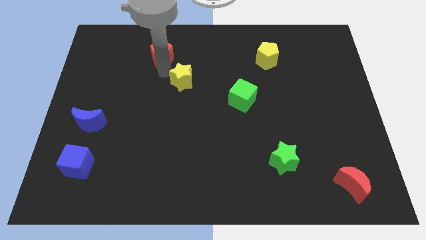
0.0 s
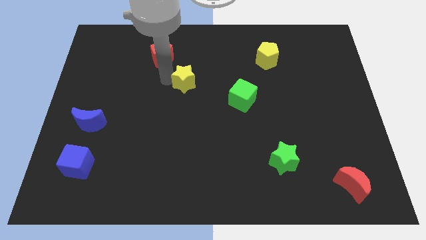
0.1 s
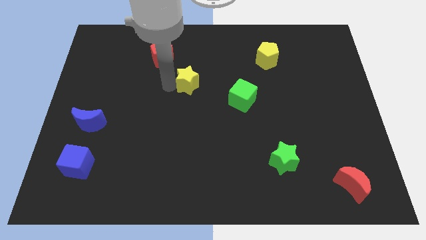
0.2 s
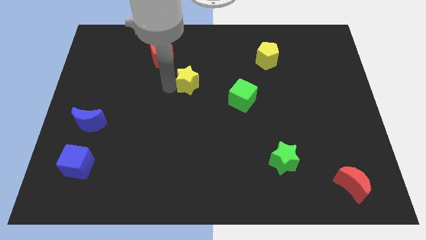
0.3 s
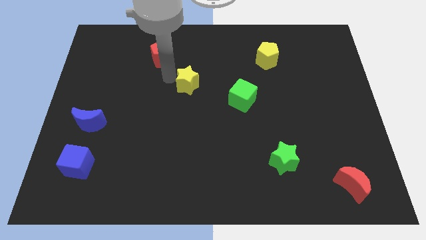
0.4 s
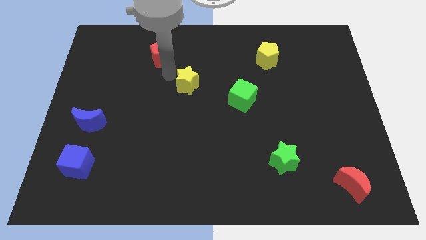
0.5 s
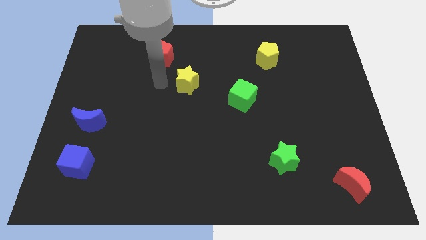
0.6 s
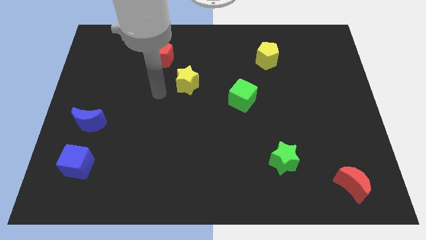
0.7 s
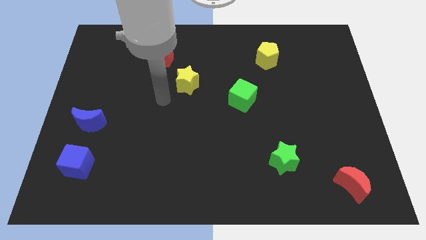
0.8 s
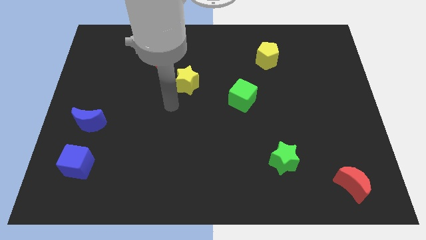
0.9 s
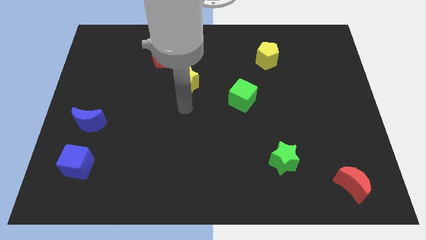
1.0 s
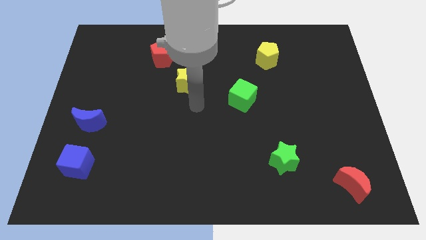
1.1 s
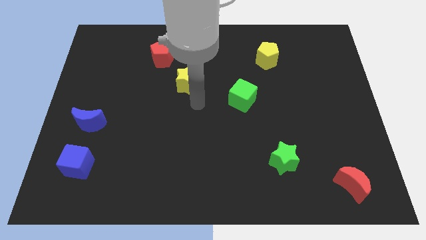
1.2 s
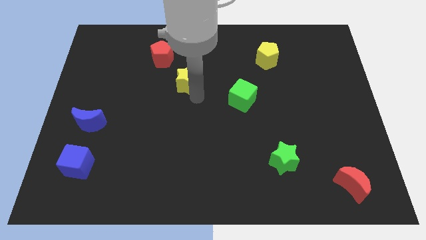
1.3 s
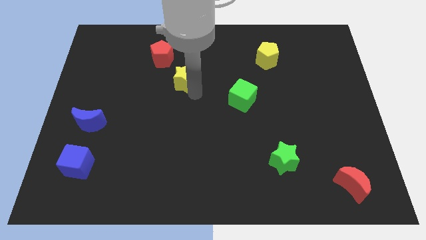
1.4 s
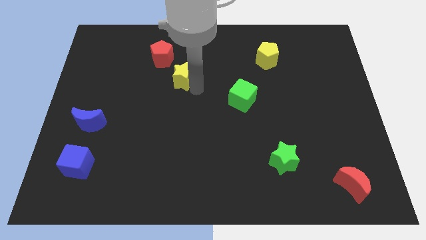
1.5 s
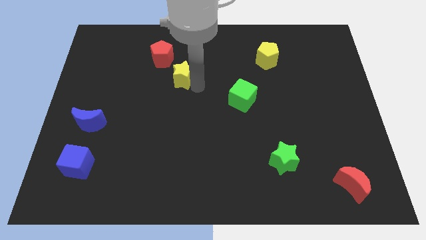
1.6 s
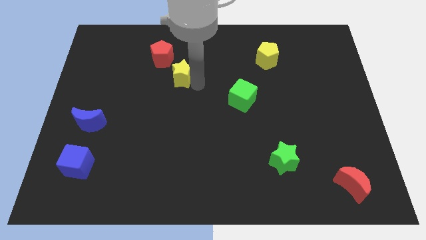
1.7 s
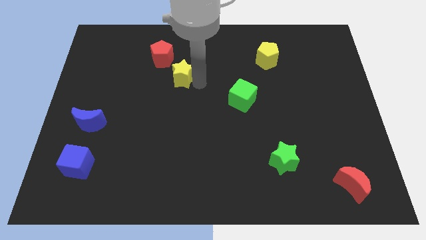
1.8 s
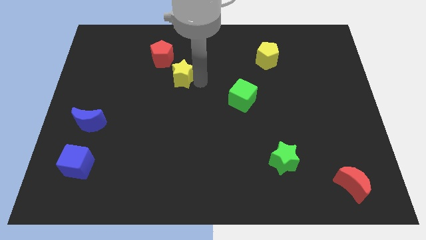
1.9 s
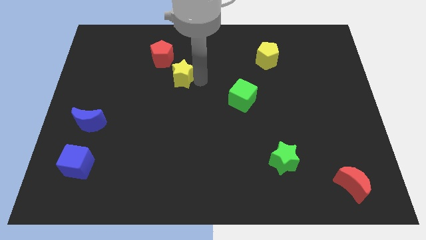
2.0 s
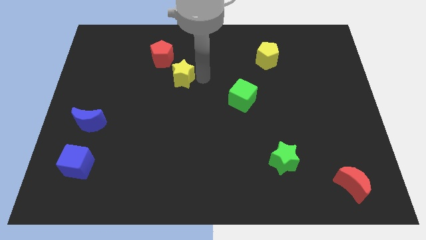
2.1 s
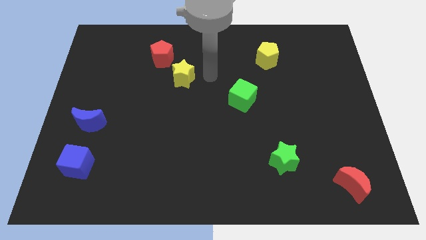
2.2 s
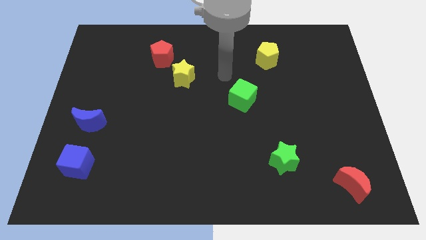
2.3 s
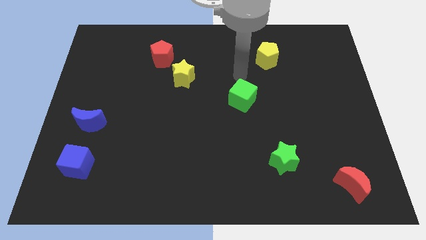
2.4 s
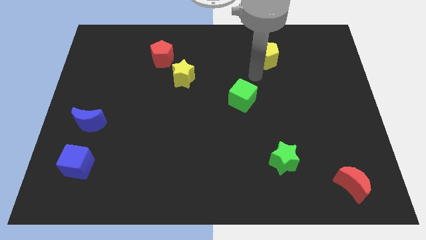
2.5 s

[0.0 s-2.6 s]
move the yellow star into the red pentagon

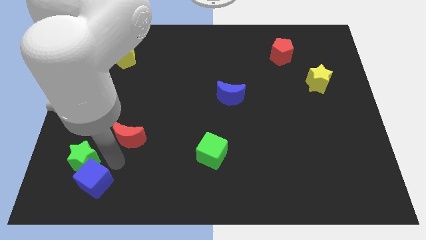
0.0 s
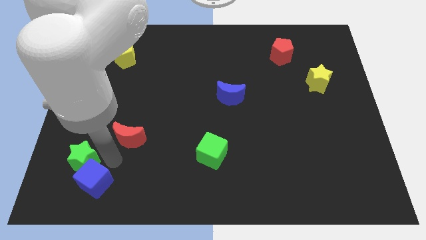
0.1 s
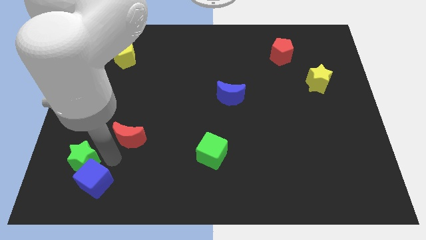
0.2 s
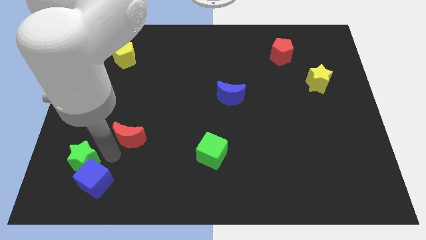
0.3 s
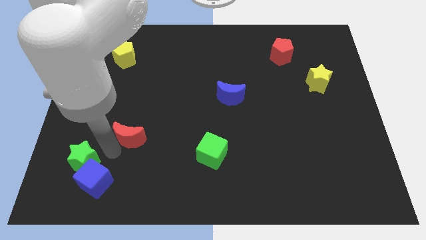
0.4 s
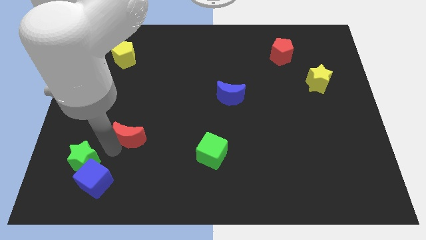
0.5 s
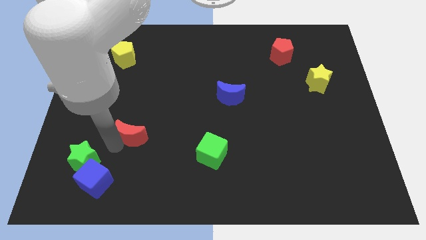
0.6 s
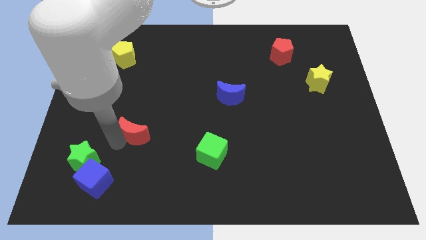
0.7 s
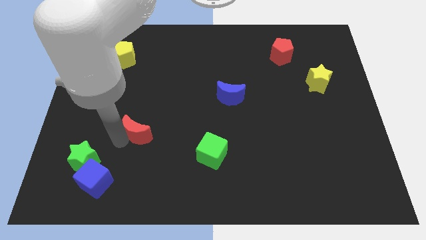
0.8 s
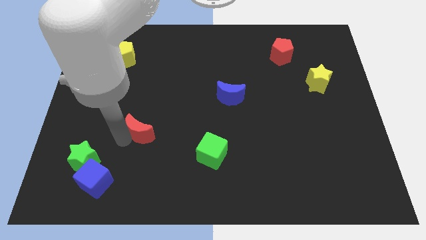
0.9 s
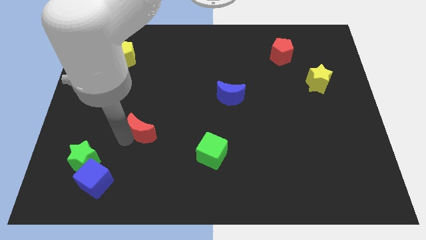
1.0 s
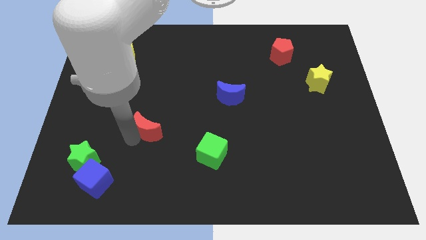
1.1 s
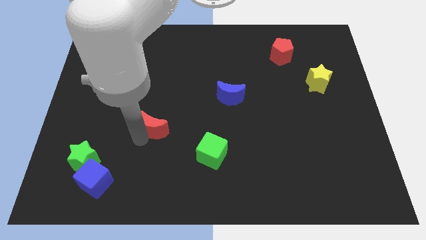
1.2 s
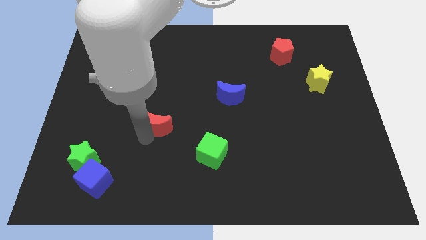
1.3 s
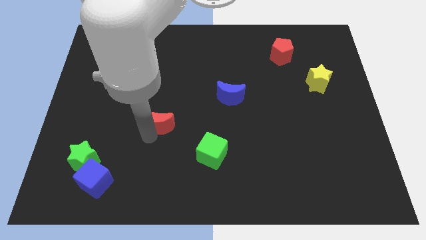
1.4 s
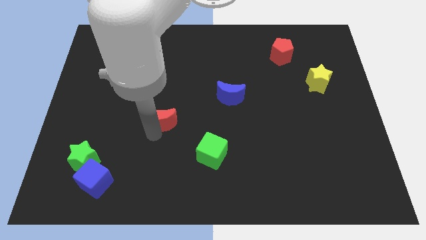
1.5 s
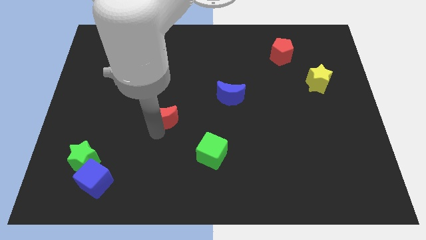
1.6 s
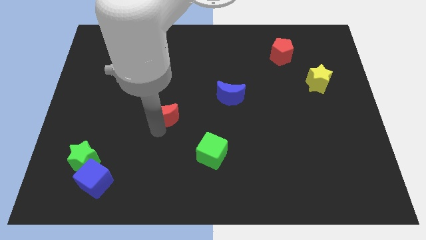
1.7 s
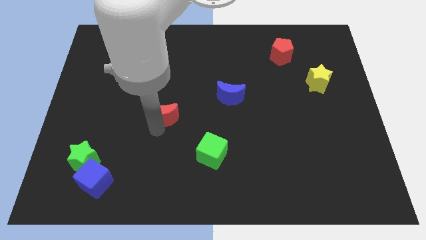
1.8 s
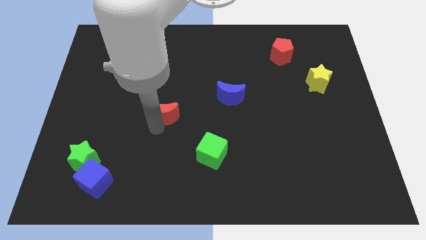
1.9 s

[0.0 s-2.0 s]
move the red moon towards the cenetr

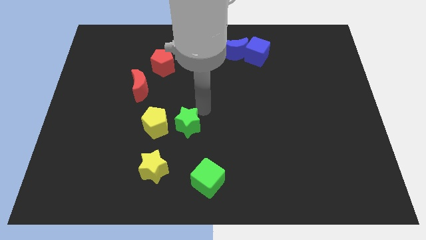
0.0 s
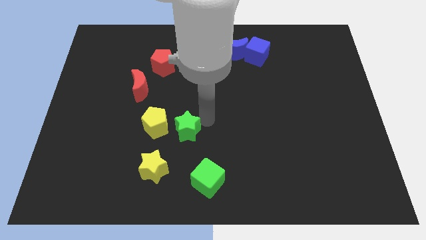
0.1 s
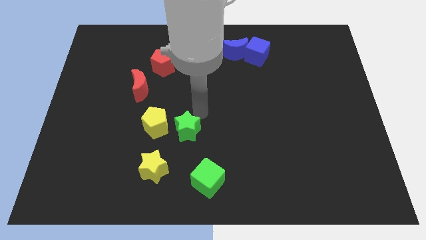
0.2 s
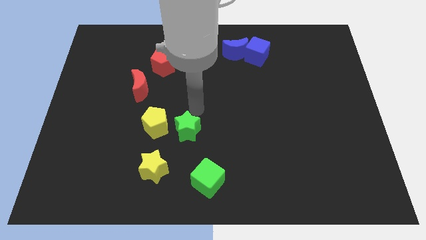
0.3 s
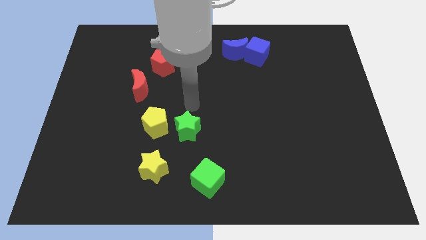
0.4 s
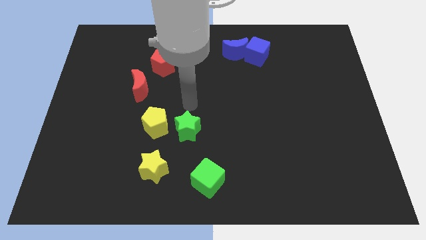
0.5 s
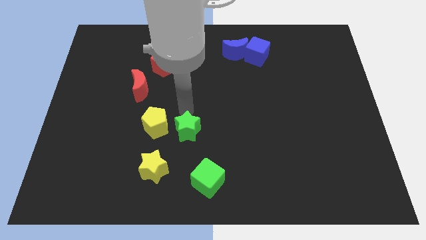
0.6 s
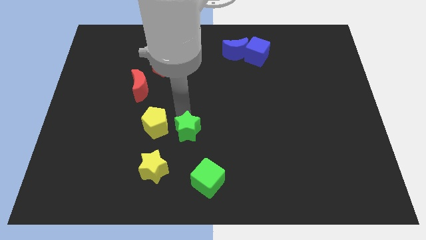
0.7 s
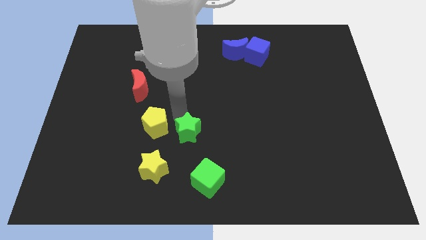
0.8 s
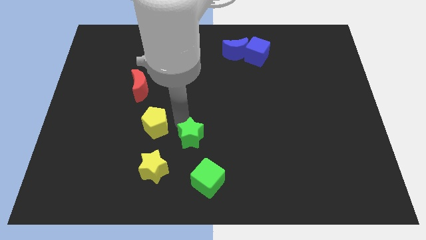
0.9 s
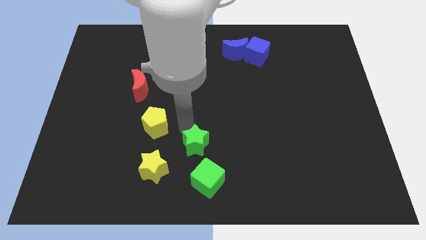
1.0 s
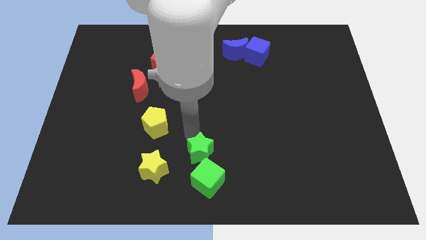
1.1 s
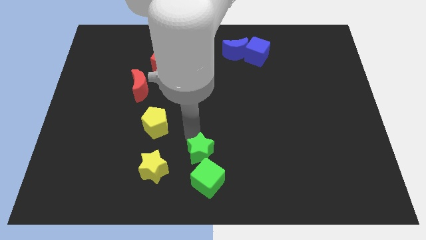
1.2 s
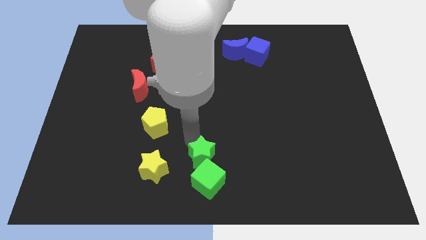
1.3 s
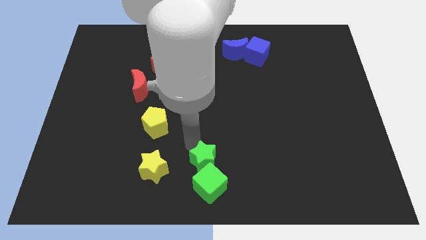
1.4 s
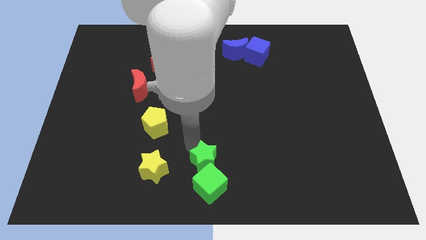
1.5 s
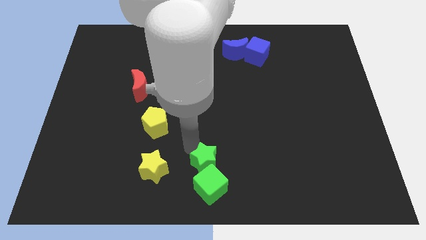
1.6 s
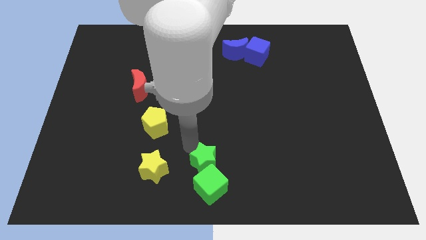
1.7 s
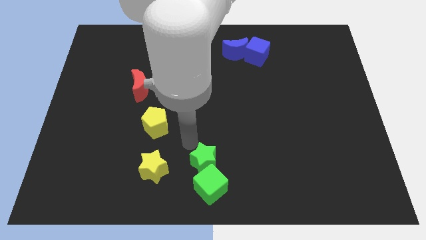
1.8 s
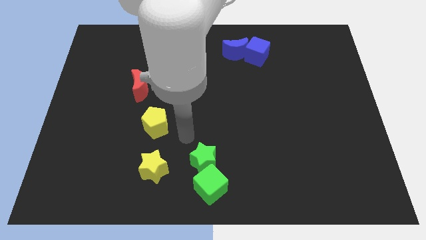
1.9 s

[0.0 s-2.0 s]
place both the green blocks at the bottom center of the board

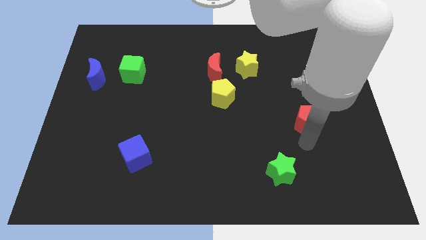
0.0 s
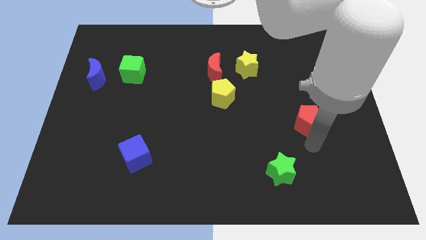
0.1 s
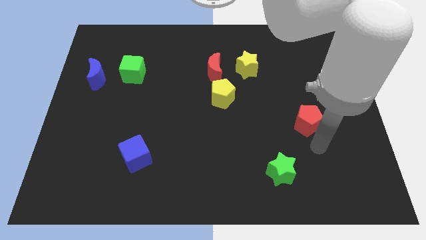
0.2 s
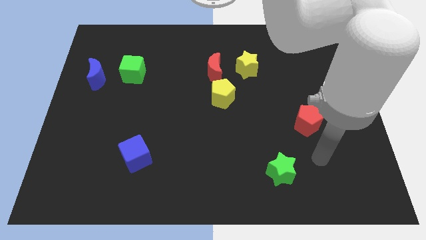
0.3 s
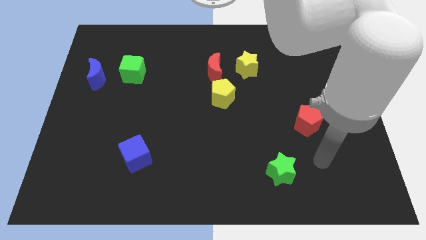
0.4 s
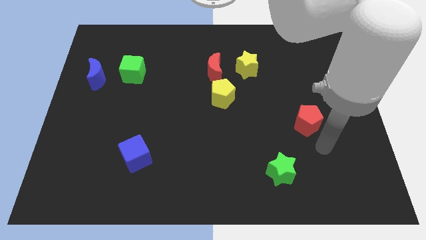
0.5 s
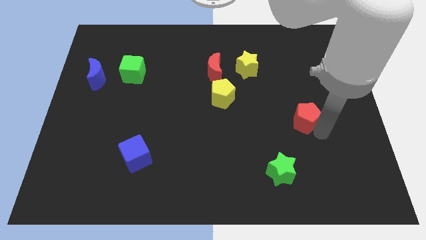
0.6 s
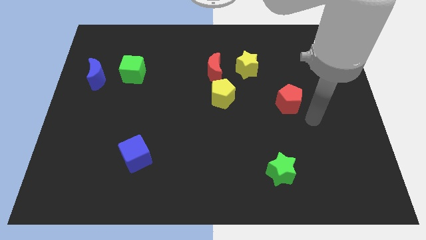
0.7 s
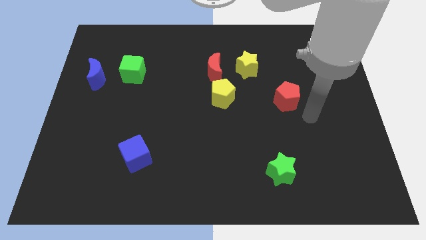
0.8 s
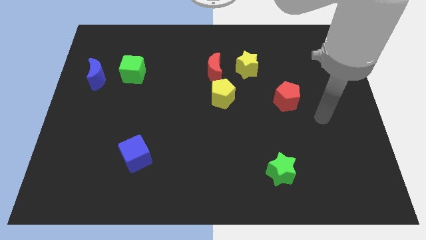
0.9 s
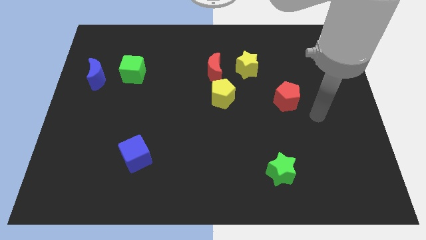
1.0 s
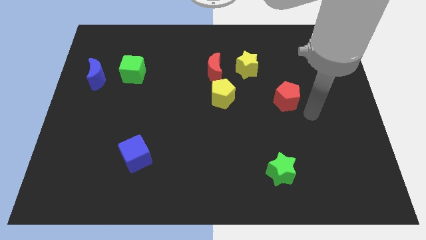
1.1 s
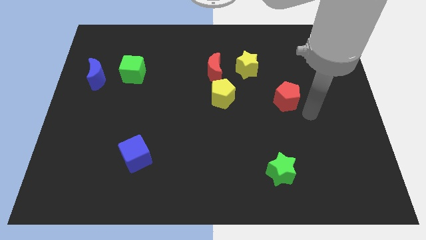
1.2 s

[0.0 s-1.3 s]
move the red pentagon to the right of the yellow pentagon

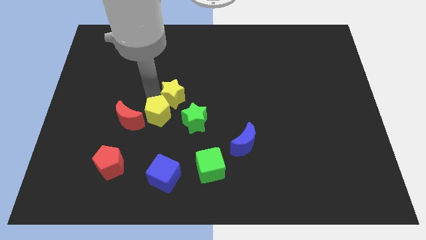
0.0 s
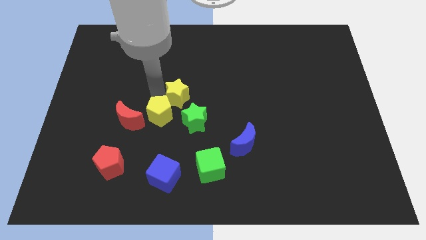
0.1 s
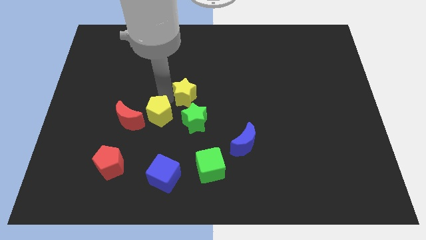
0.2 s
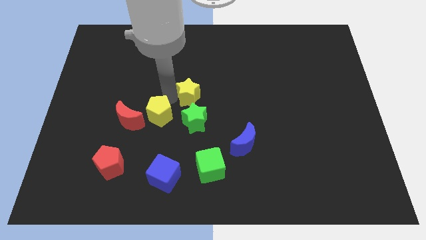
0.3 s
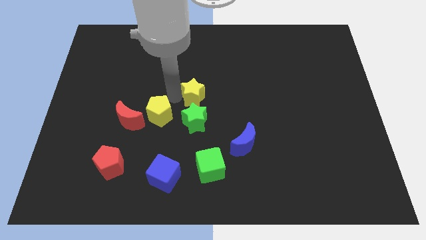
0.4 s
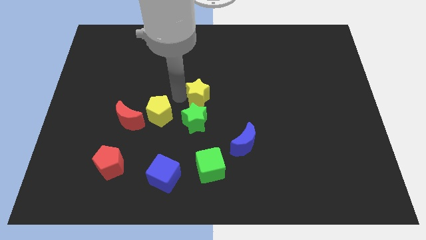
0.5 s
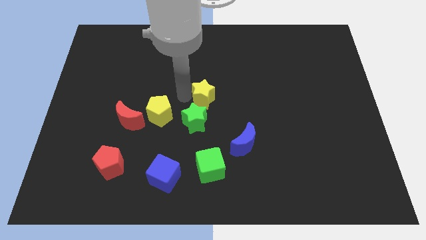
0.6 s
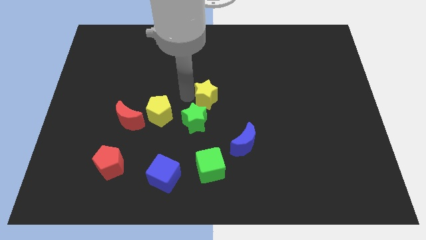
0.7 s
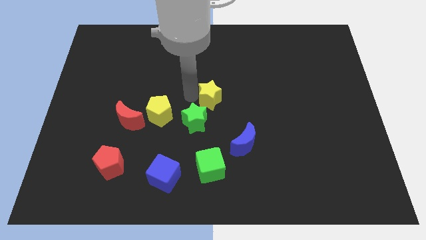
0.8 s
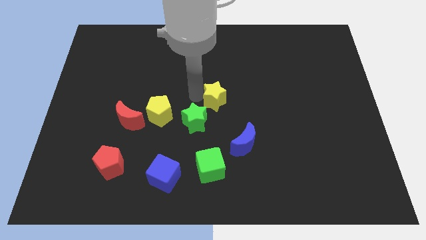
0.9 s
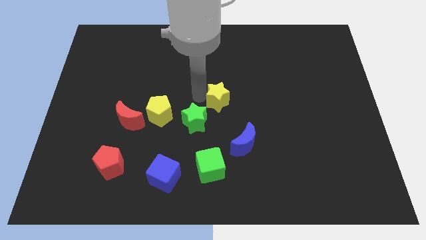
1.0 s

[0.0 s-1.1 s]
separate yellow star from yellow pentagon
